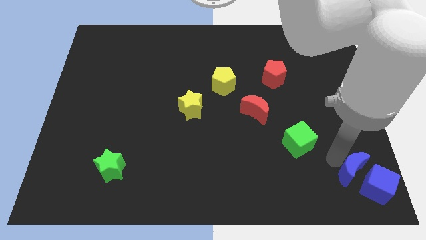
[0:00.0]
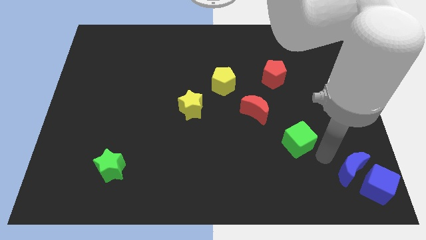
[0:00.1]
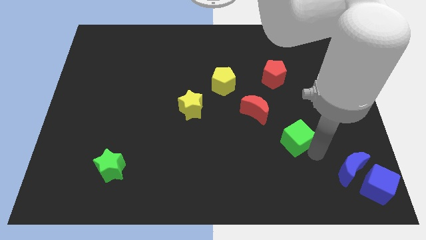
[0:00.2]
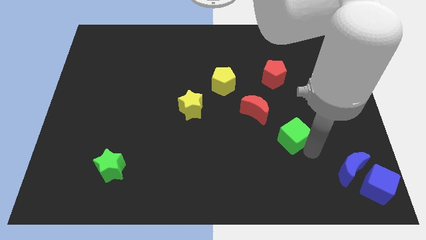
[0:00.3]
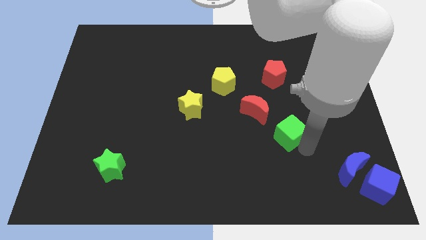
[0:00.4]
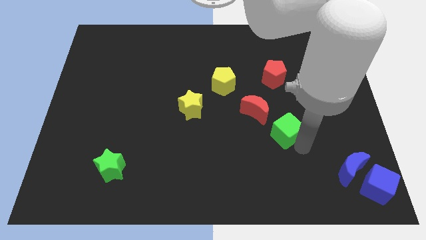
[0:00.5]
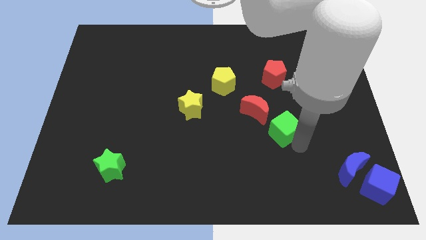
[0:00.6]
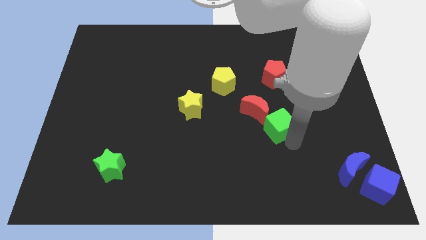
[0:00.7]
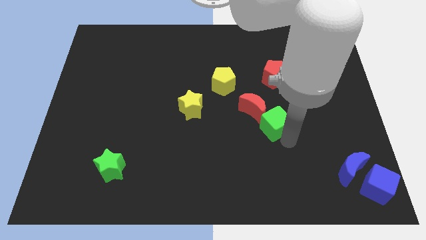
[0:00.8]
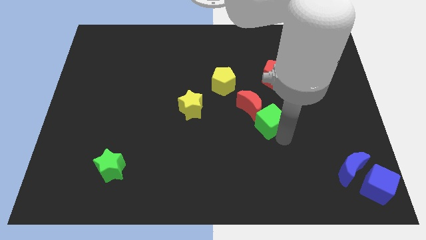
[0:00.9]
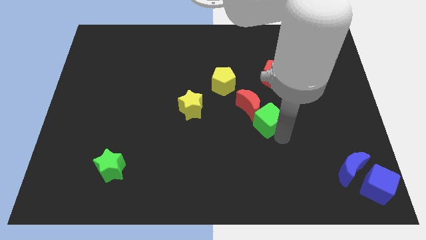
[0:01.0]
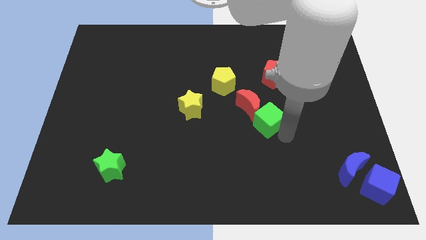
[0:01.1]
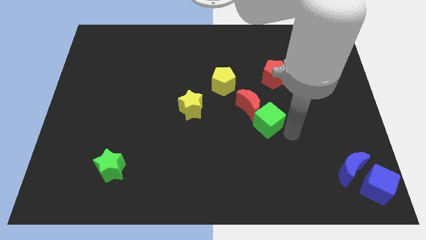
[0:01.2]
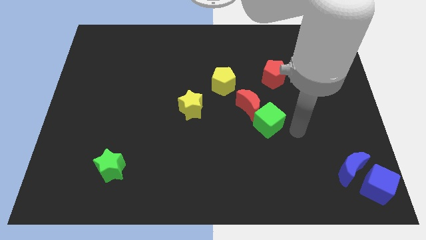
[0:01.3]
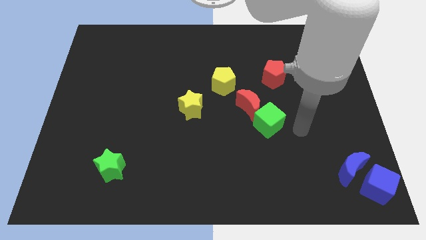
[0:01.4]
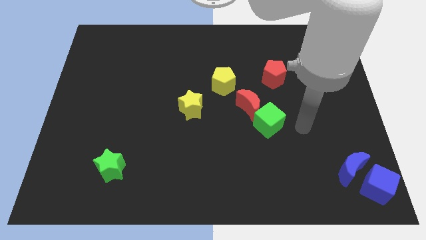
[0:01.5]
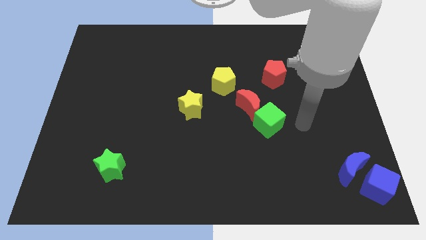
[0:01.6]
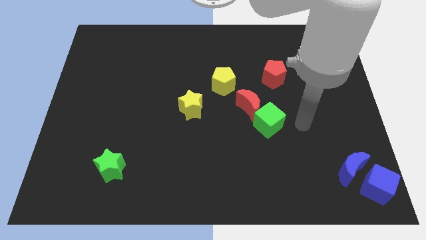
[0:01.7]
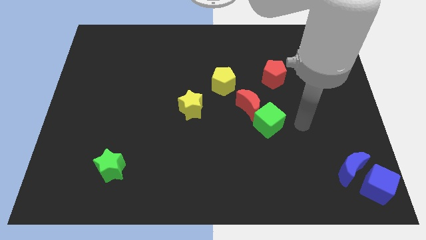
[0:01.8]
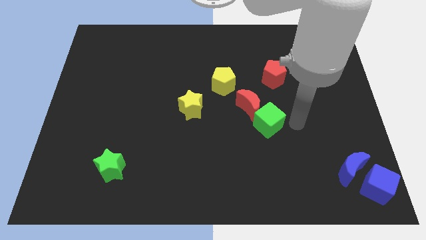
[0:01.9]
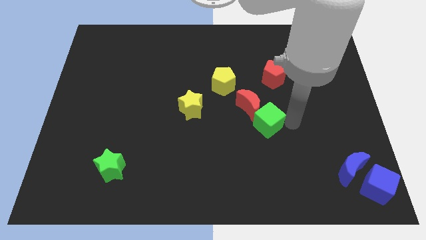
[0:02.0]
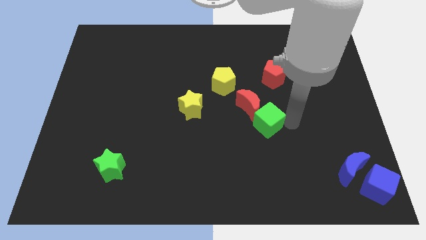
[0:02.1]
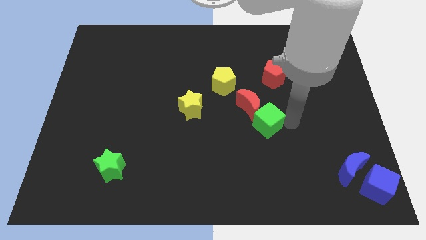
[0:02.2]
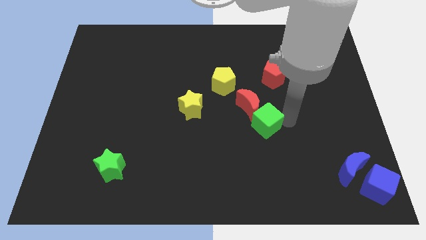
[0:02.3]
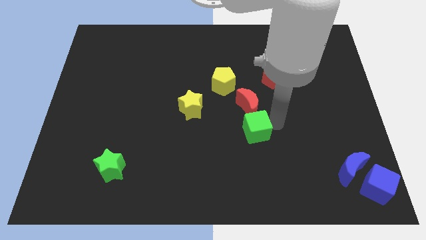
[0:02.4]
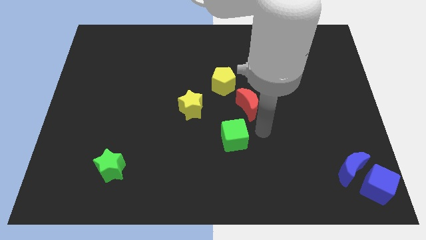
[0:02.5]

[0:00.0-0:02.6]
push the green cube to the bottom of the red crescent

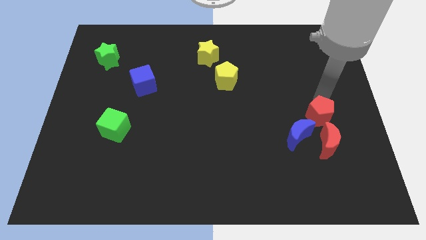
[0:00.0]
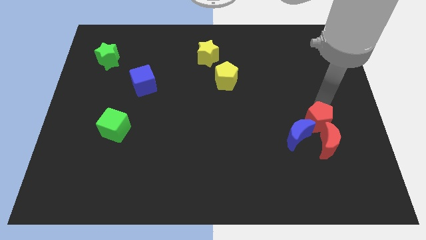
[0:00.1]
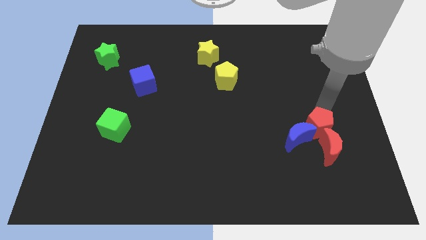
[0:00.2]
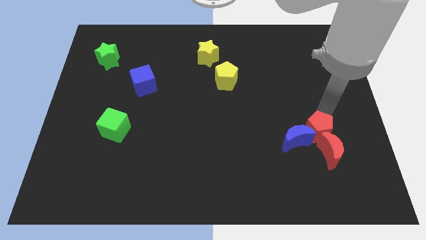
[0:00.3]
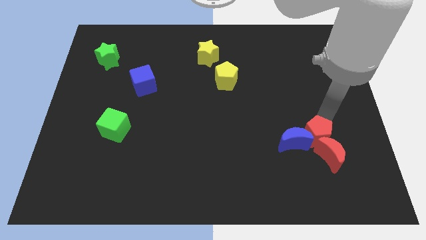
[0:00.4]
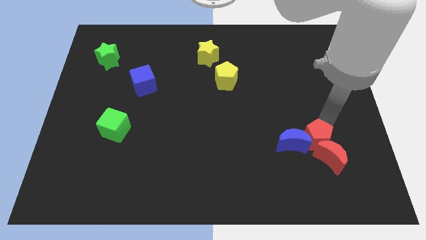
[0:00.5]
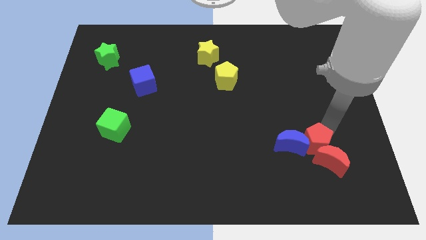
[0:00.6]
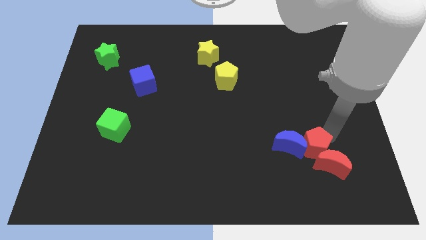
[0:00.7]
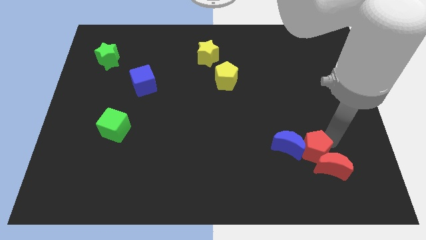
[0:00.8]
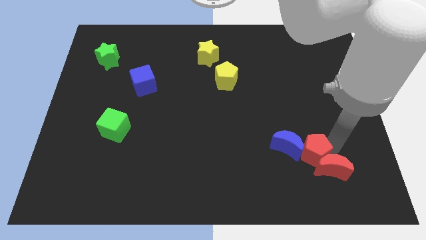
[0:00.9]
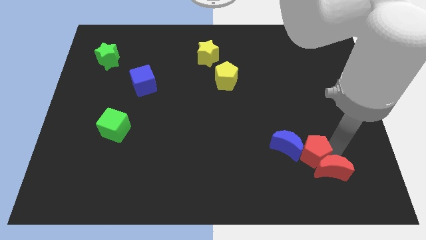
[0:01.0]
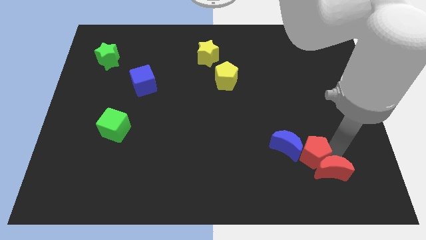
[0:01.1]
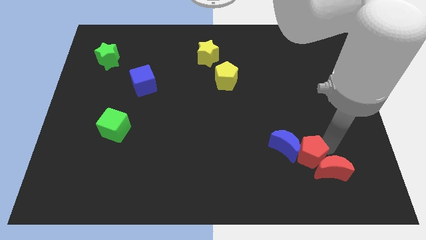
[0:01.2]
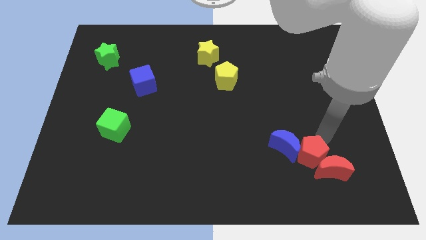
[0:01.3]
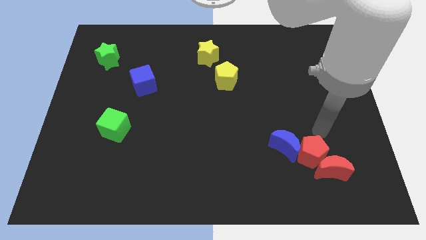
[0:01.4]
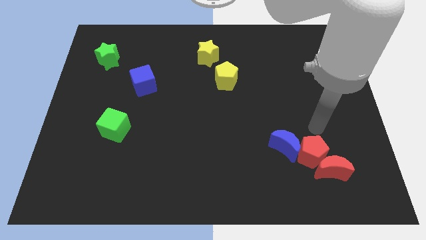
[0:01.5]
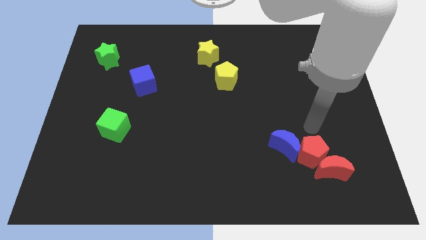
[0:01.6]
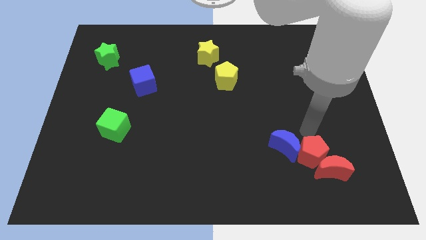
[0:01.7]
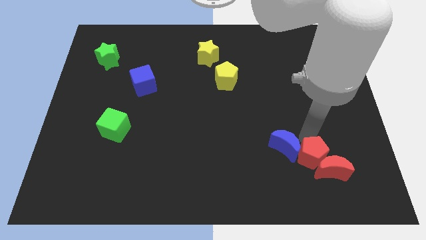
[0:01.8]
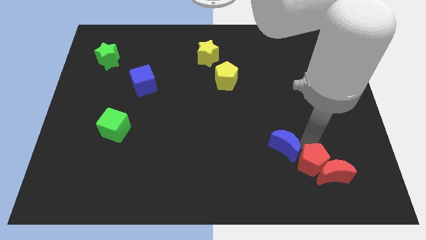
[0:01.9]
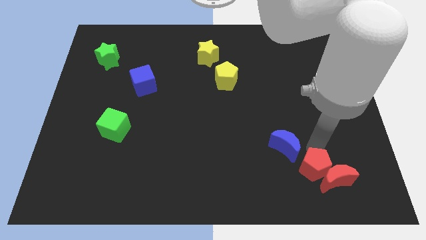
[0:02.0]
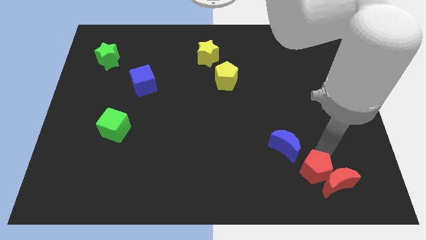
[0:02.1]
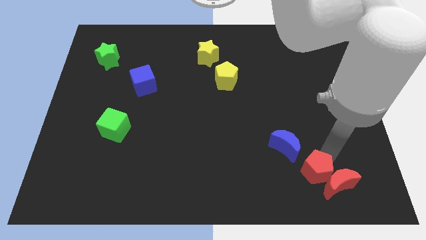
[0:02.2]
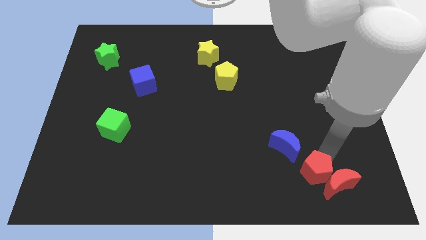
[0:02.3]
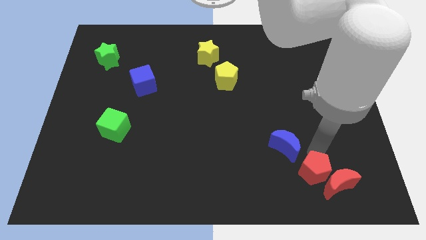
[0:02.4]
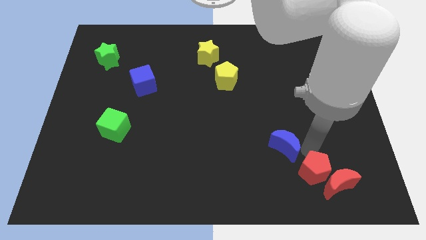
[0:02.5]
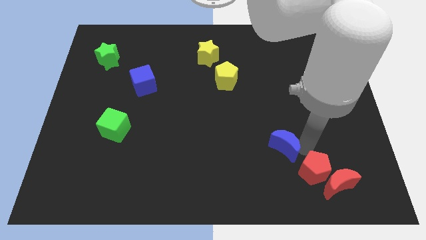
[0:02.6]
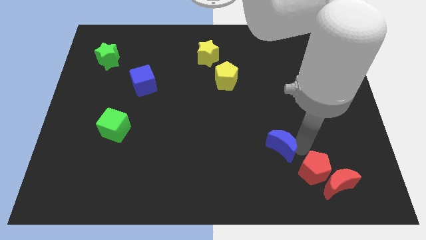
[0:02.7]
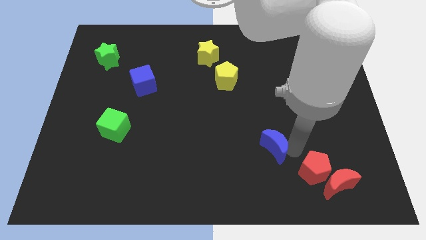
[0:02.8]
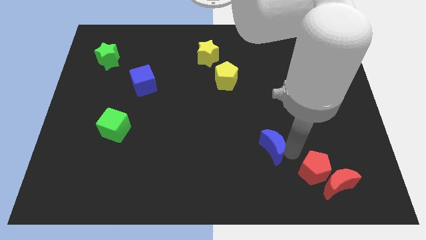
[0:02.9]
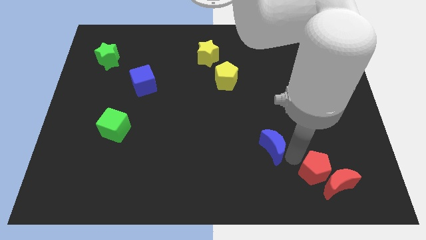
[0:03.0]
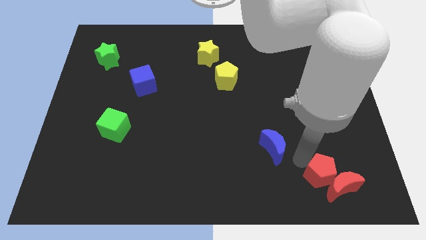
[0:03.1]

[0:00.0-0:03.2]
separate the red blocks and the blue moon

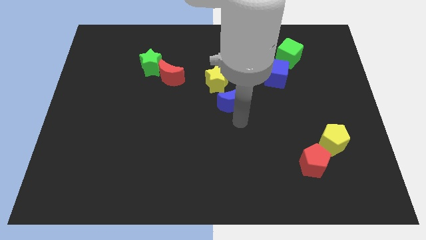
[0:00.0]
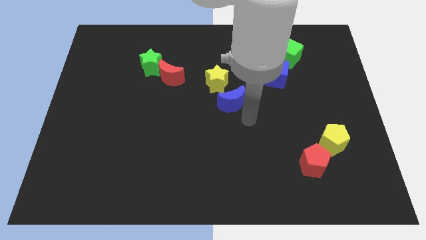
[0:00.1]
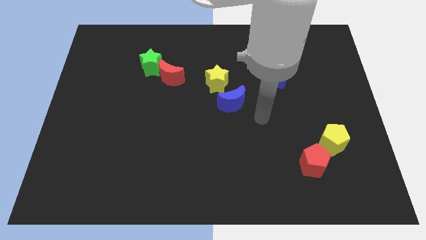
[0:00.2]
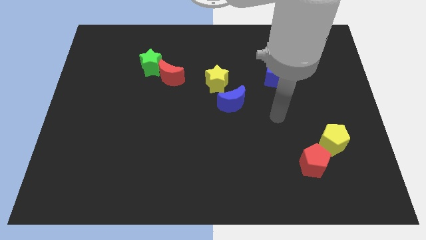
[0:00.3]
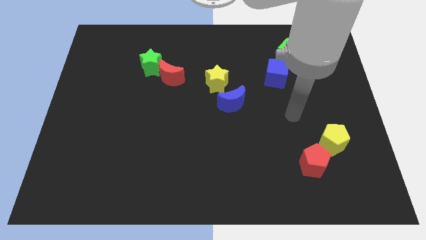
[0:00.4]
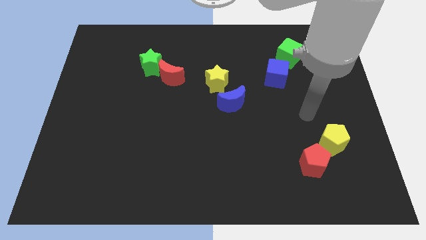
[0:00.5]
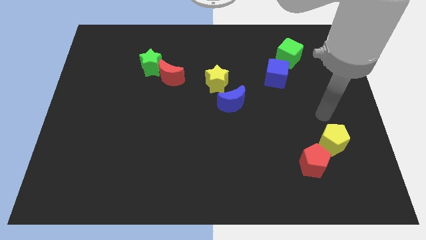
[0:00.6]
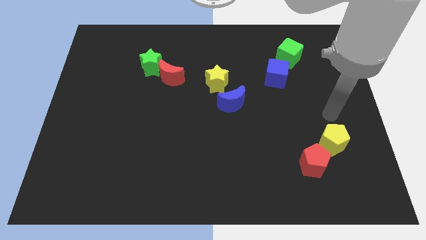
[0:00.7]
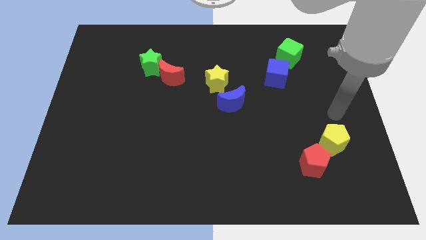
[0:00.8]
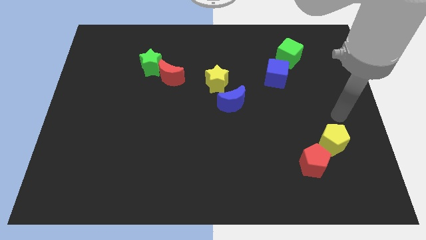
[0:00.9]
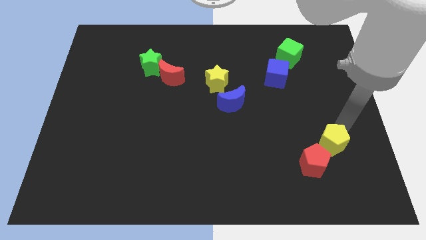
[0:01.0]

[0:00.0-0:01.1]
move the arm to the top of the yellow pentagon

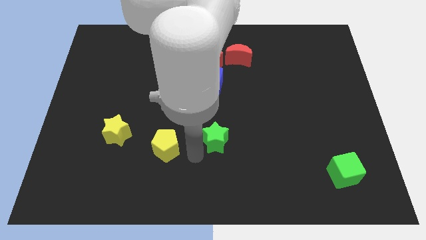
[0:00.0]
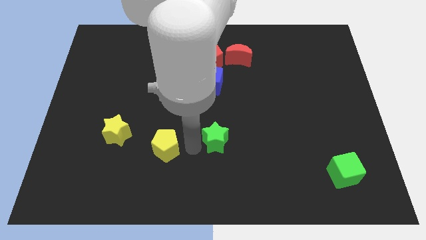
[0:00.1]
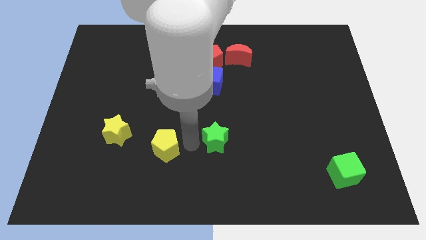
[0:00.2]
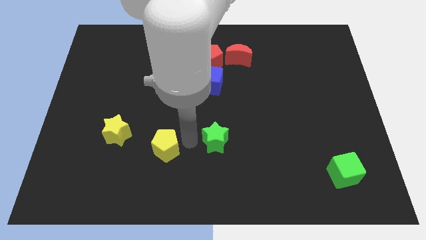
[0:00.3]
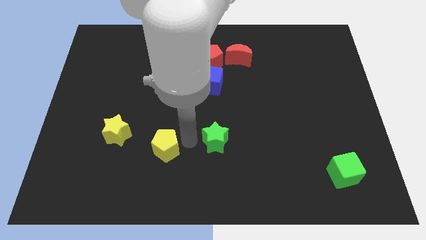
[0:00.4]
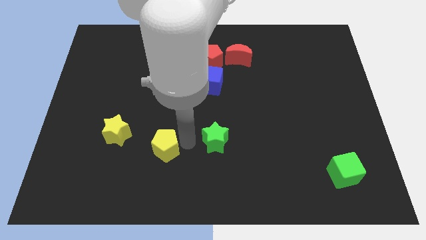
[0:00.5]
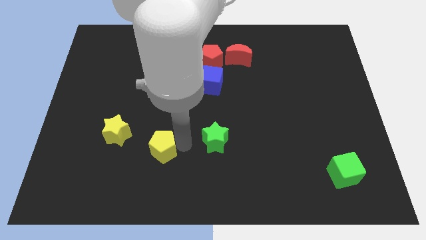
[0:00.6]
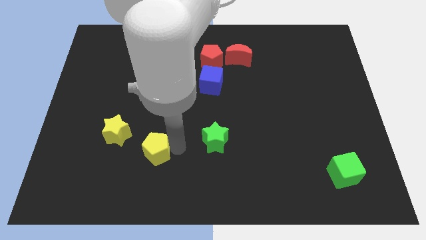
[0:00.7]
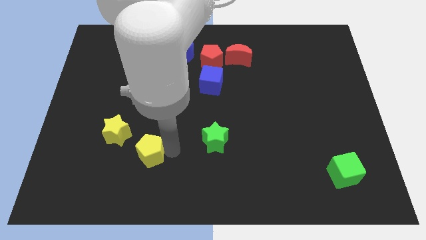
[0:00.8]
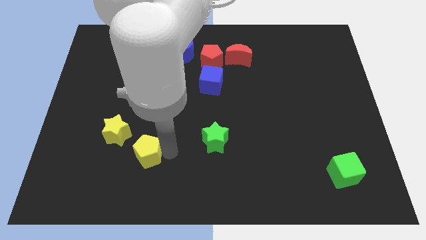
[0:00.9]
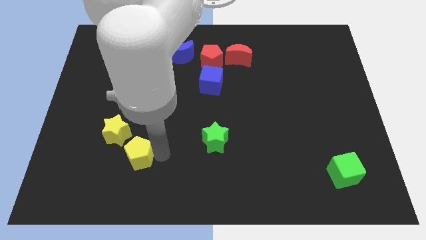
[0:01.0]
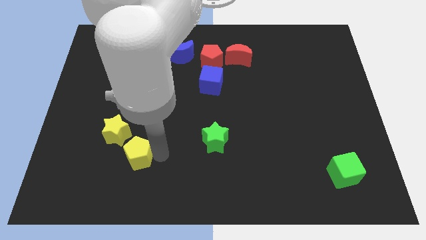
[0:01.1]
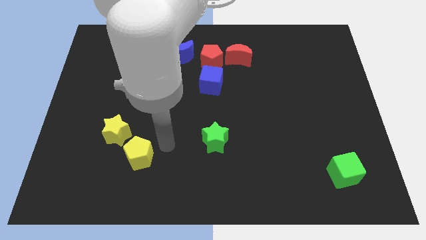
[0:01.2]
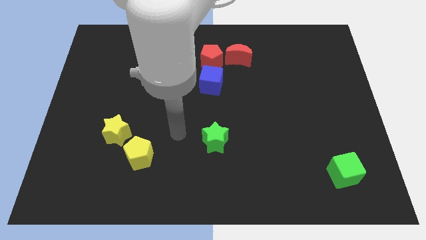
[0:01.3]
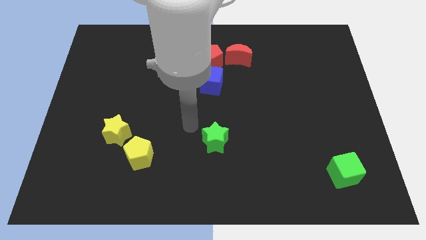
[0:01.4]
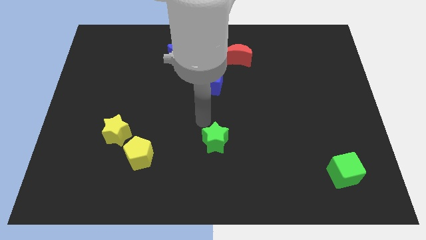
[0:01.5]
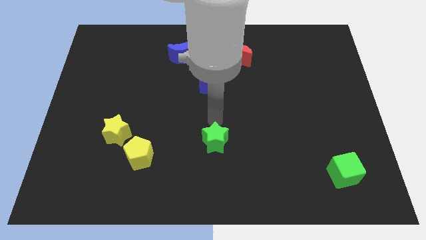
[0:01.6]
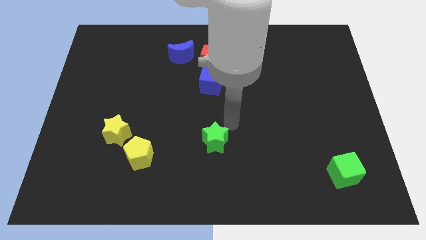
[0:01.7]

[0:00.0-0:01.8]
move the yellow pentagon close to the yellow star

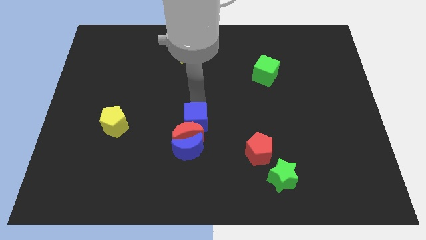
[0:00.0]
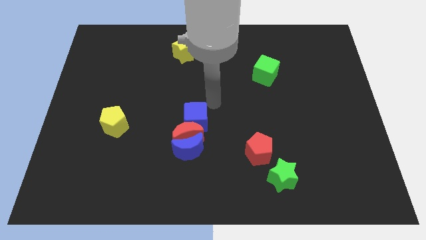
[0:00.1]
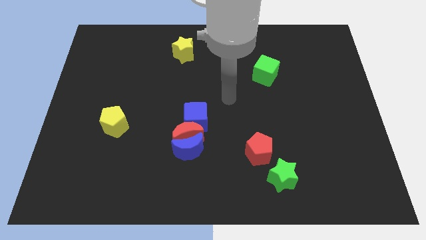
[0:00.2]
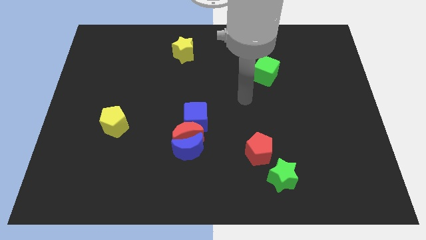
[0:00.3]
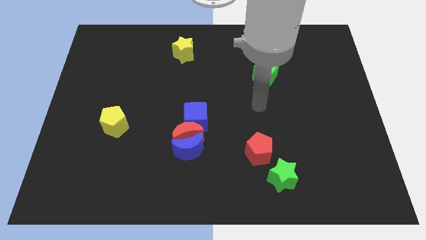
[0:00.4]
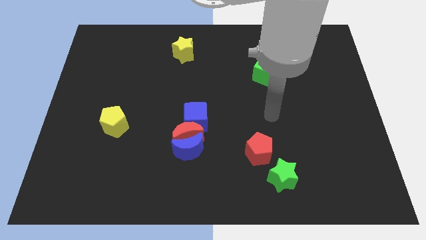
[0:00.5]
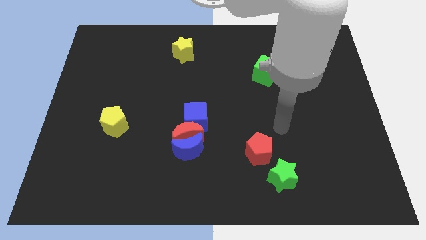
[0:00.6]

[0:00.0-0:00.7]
move your arm away from the blue cube
